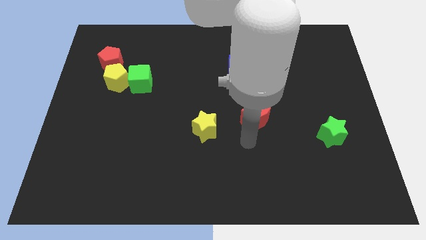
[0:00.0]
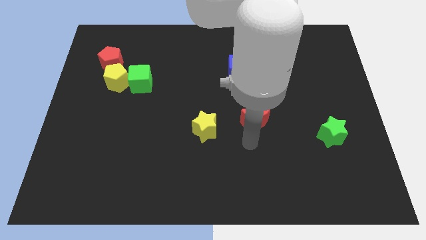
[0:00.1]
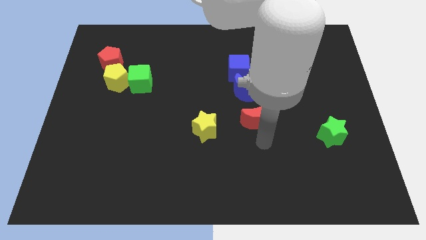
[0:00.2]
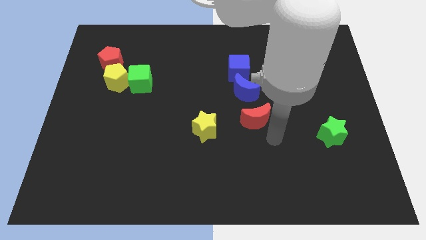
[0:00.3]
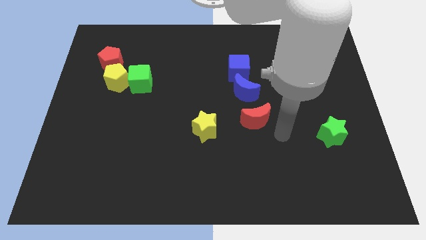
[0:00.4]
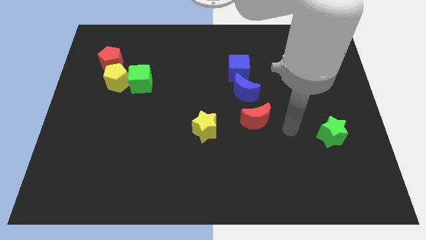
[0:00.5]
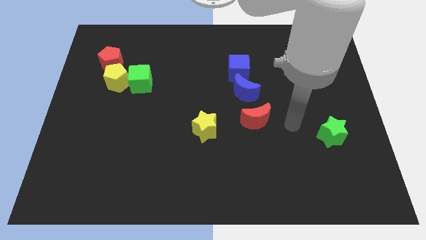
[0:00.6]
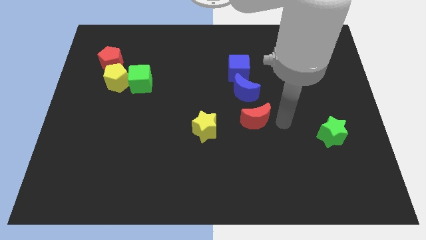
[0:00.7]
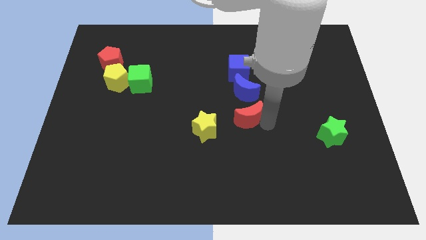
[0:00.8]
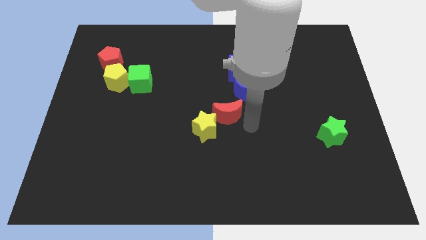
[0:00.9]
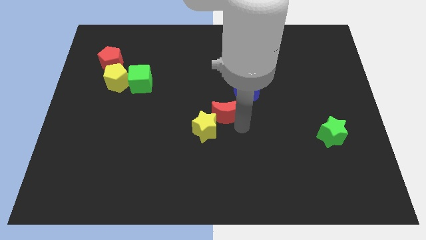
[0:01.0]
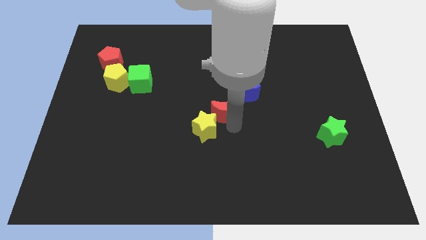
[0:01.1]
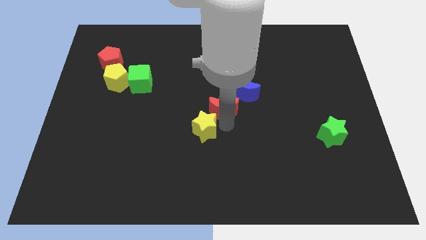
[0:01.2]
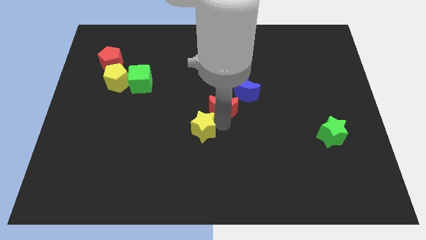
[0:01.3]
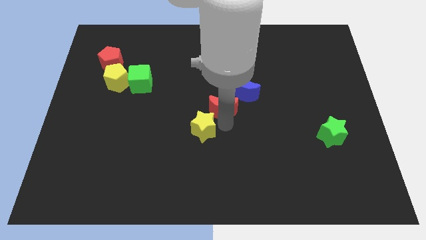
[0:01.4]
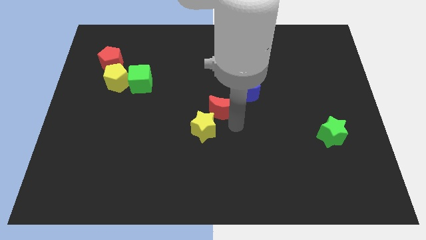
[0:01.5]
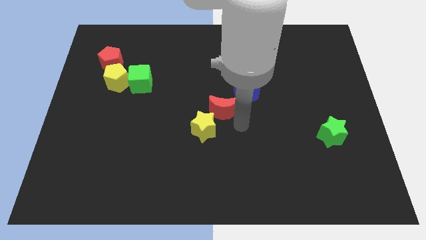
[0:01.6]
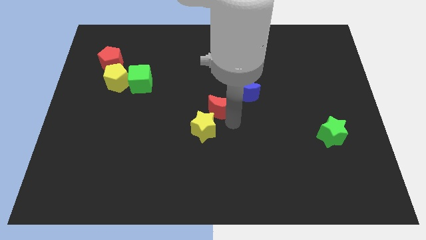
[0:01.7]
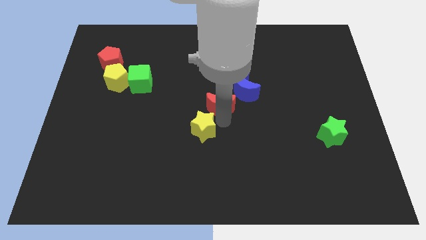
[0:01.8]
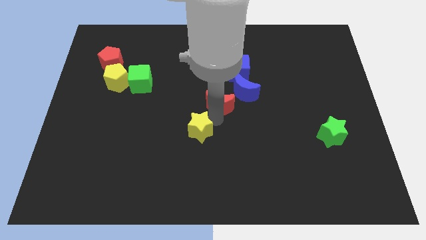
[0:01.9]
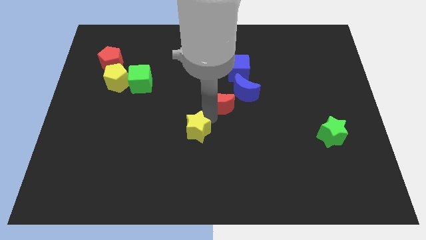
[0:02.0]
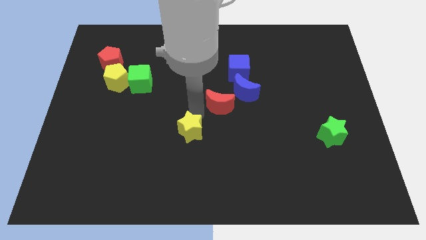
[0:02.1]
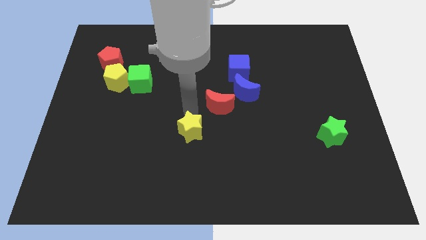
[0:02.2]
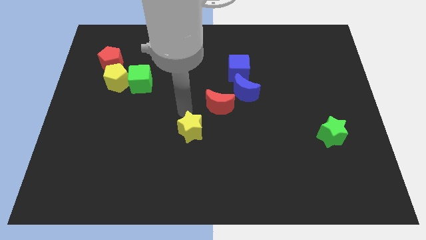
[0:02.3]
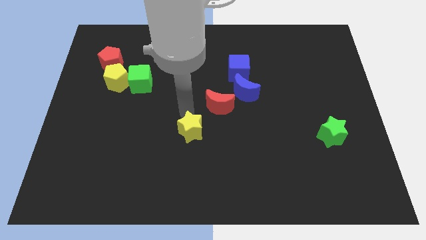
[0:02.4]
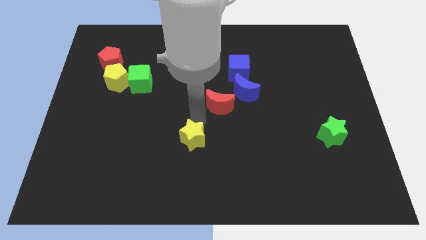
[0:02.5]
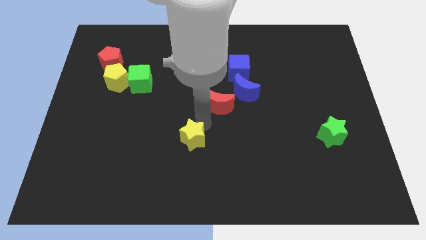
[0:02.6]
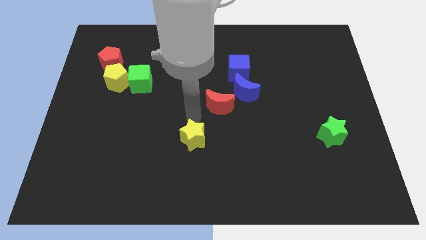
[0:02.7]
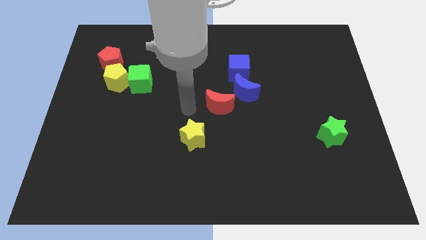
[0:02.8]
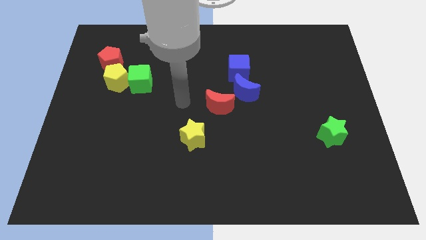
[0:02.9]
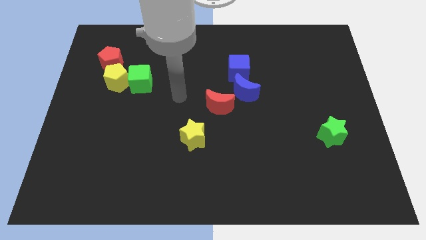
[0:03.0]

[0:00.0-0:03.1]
separate yellow star and red moon

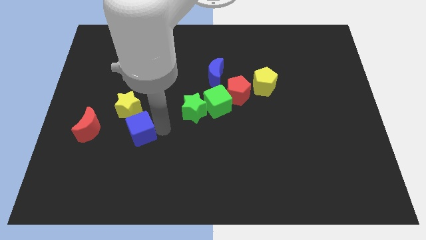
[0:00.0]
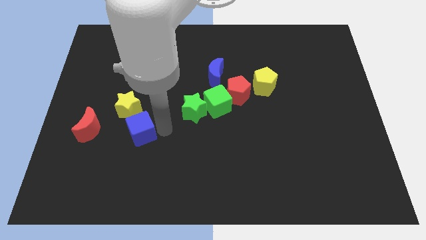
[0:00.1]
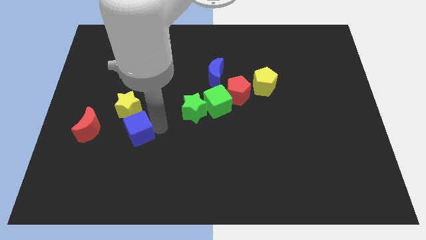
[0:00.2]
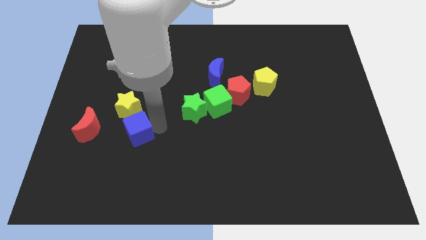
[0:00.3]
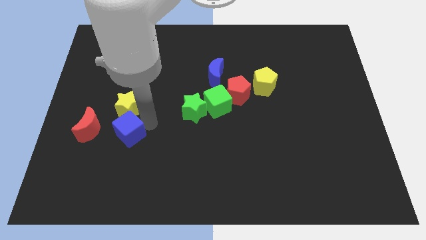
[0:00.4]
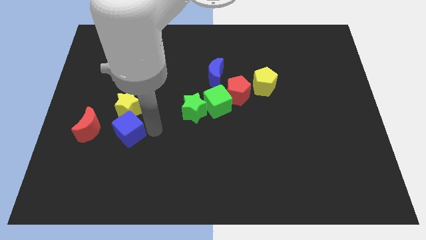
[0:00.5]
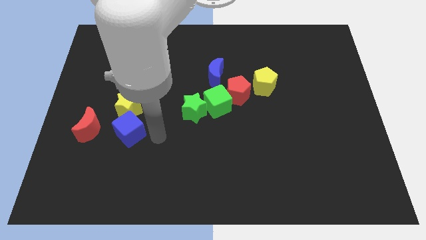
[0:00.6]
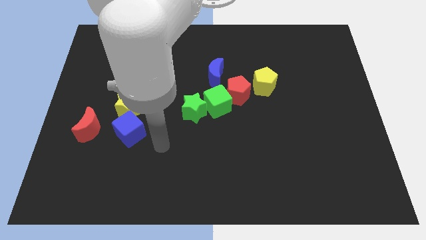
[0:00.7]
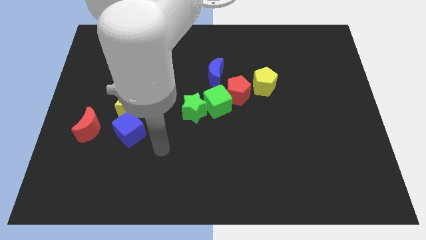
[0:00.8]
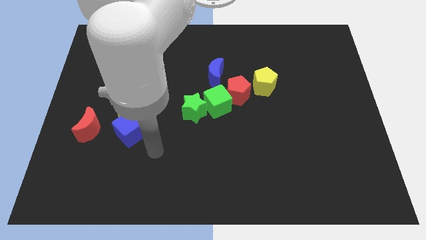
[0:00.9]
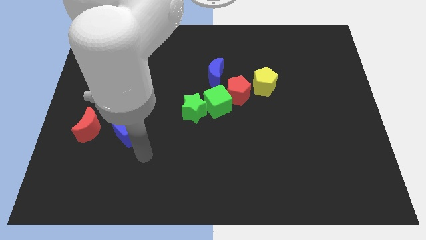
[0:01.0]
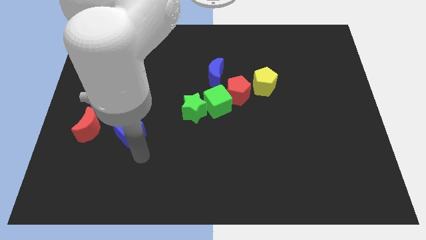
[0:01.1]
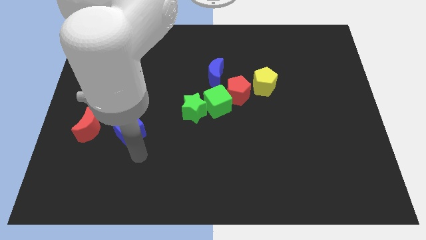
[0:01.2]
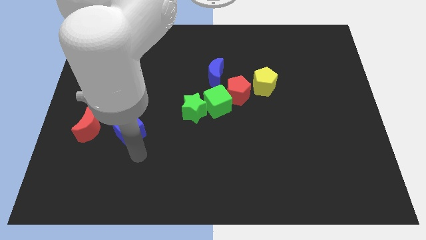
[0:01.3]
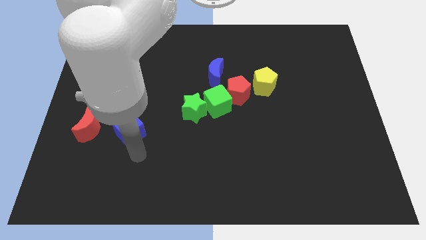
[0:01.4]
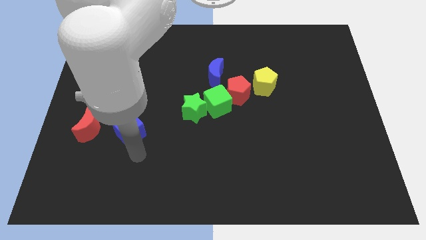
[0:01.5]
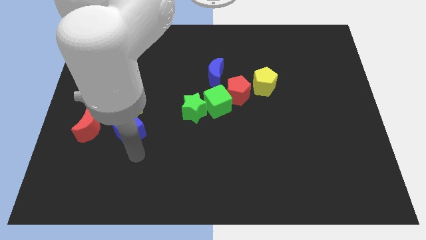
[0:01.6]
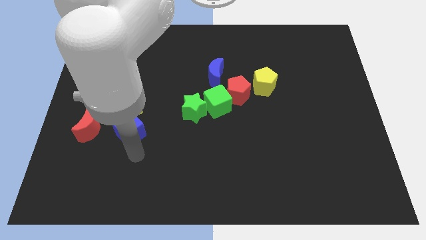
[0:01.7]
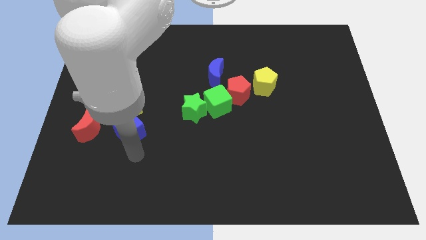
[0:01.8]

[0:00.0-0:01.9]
push the blue cube close to the red moon

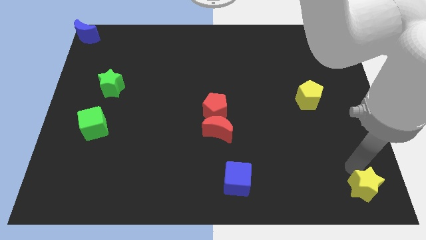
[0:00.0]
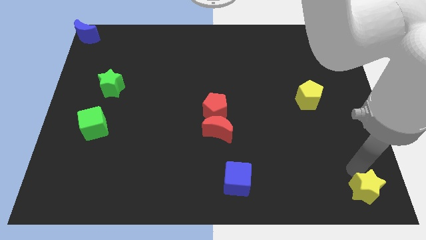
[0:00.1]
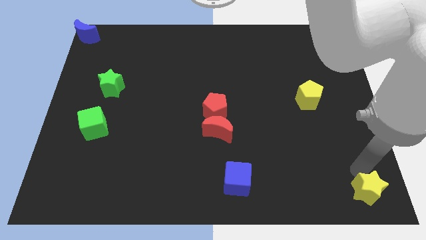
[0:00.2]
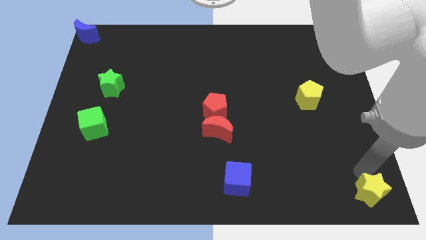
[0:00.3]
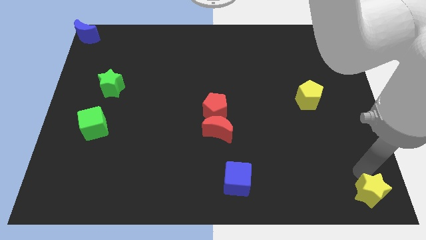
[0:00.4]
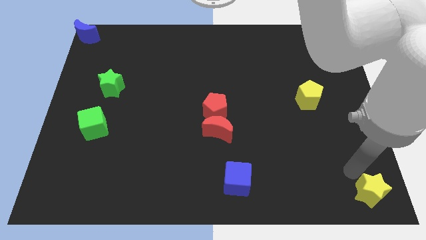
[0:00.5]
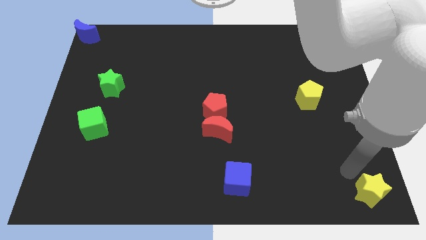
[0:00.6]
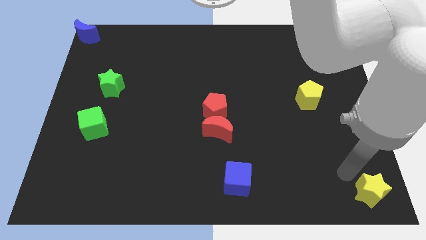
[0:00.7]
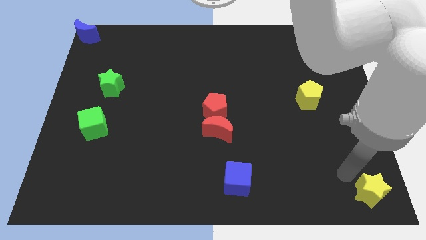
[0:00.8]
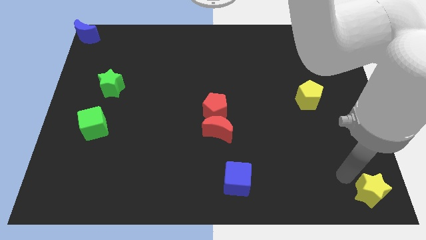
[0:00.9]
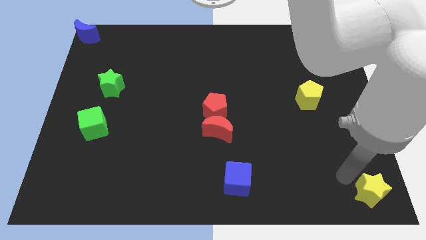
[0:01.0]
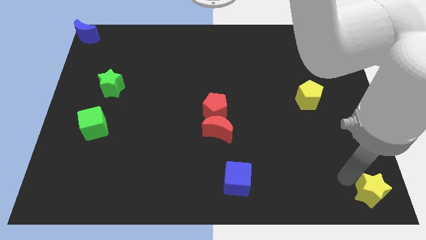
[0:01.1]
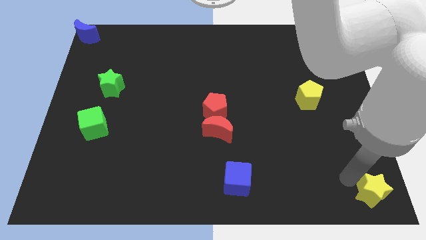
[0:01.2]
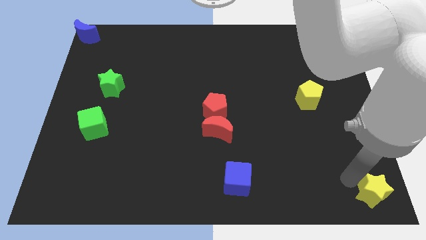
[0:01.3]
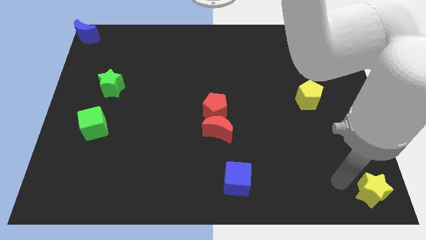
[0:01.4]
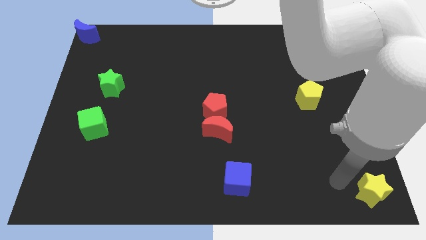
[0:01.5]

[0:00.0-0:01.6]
push yellow star slightly downwards

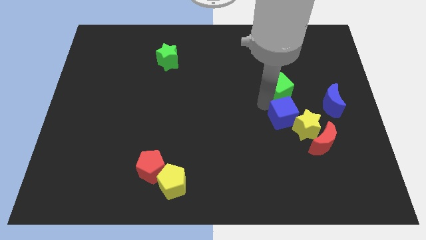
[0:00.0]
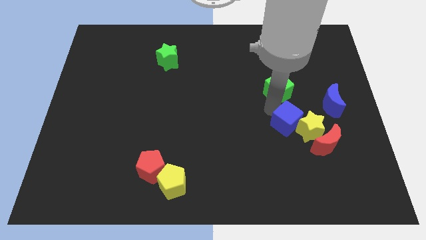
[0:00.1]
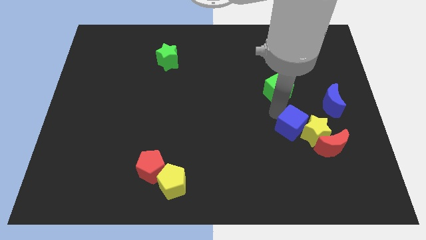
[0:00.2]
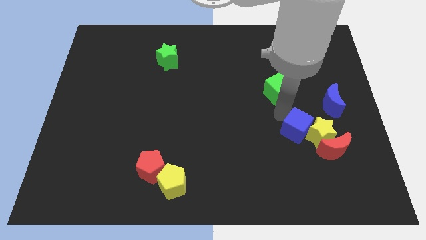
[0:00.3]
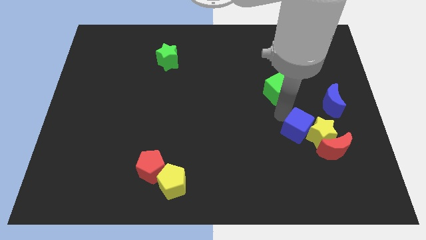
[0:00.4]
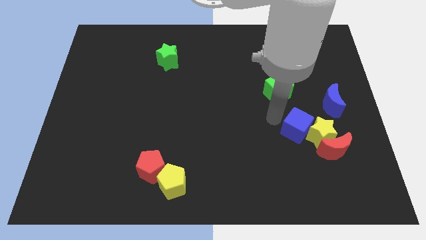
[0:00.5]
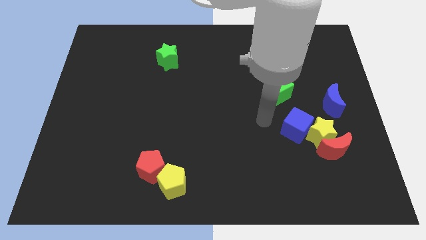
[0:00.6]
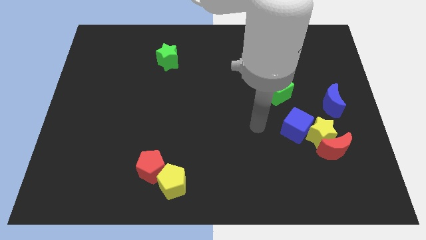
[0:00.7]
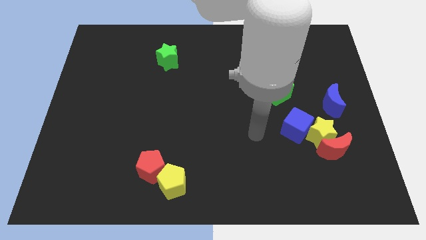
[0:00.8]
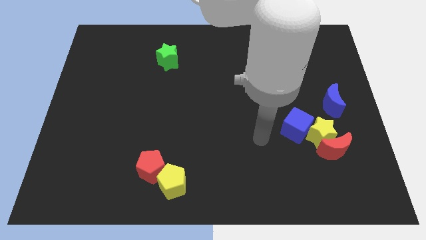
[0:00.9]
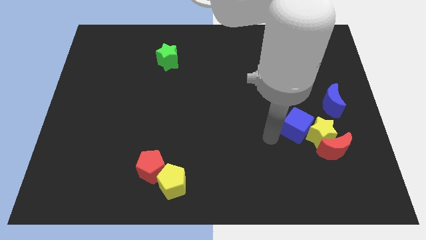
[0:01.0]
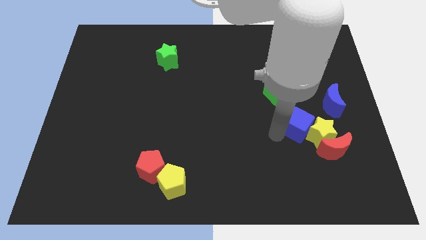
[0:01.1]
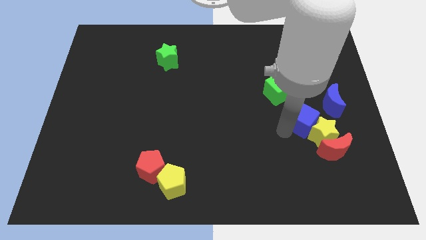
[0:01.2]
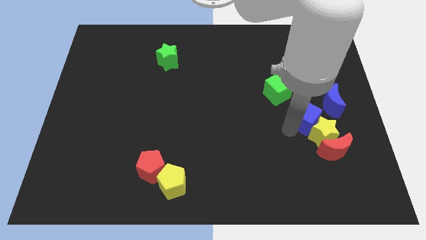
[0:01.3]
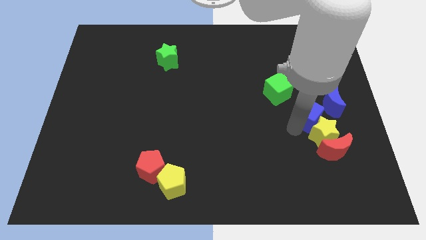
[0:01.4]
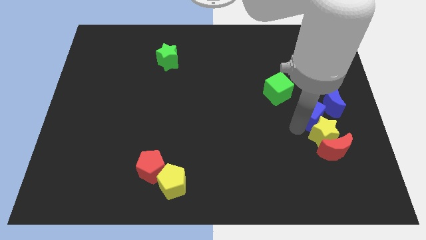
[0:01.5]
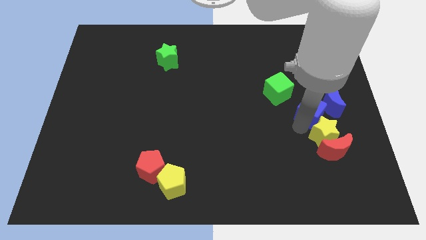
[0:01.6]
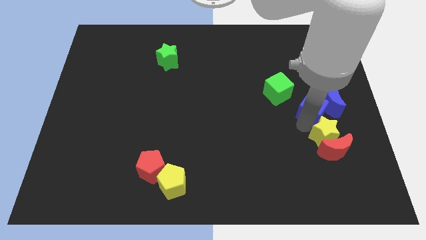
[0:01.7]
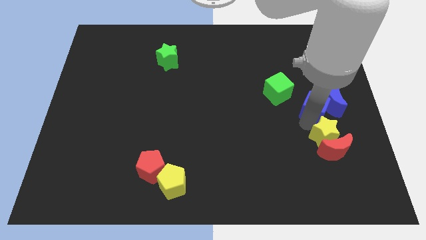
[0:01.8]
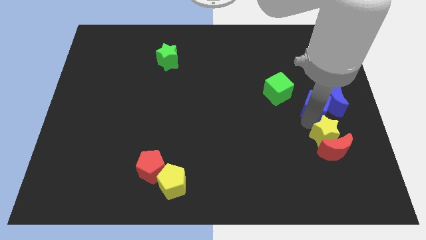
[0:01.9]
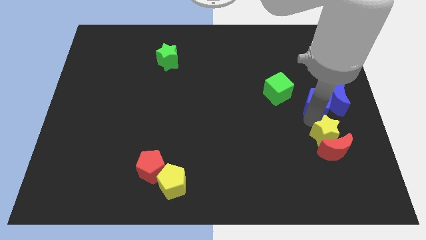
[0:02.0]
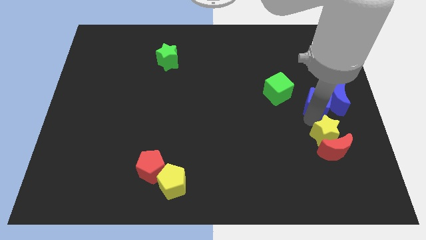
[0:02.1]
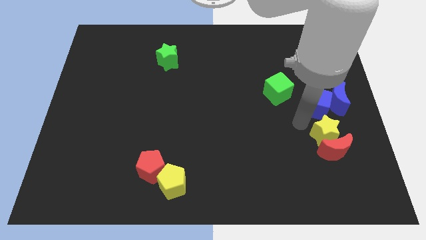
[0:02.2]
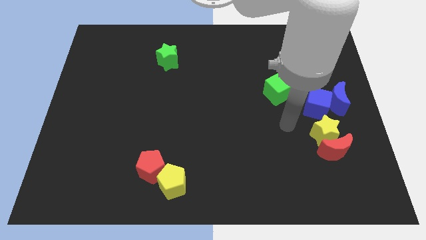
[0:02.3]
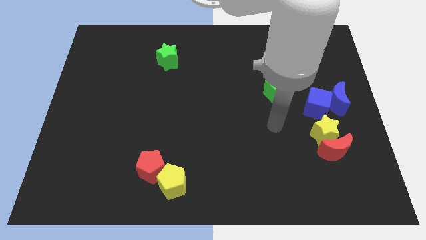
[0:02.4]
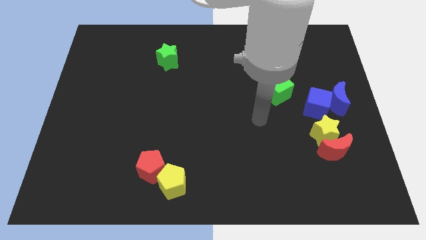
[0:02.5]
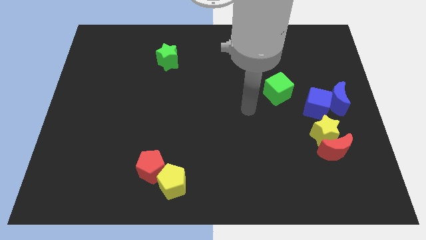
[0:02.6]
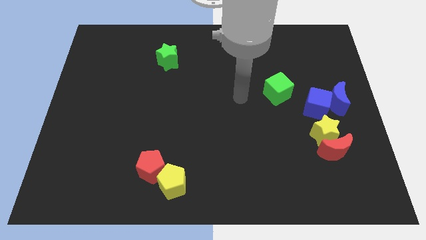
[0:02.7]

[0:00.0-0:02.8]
push blue cube into blue moon
